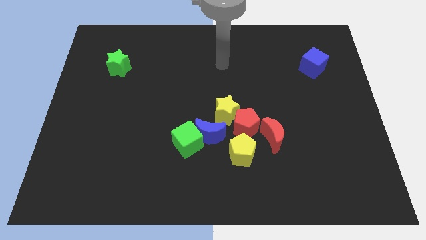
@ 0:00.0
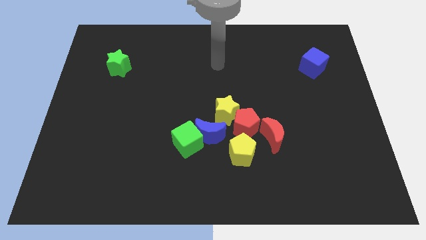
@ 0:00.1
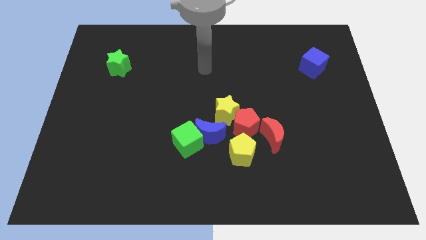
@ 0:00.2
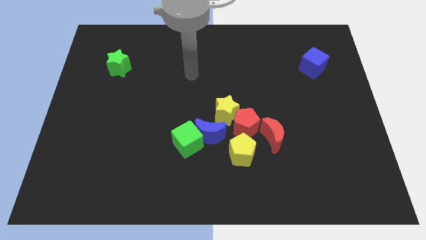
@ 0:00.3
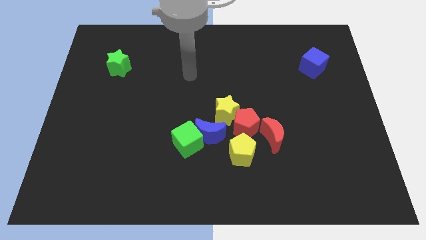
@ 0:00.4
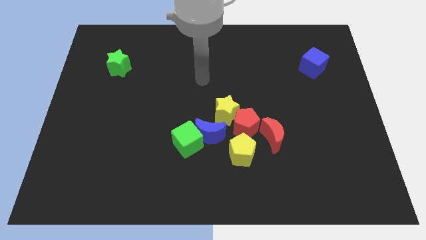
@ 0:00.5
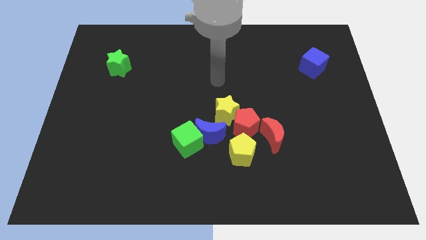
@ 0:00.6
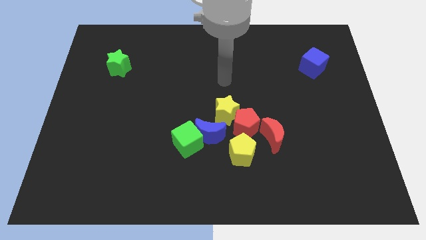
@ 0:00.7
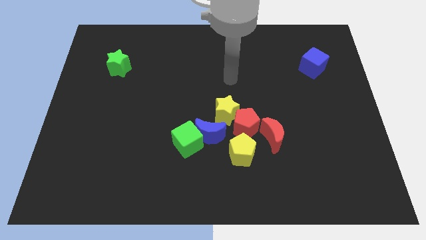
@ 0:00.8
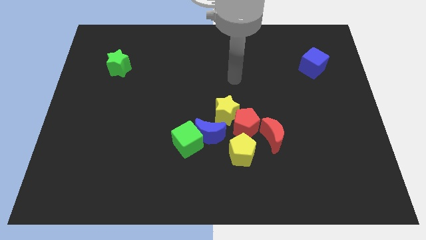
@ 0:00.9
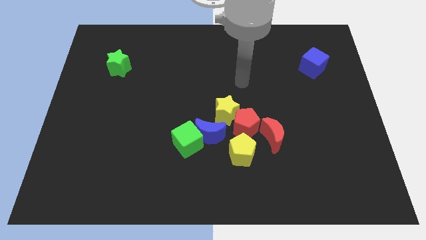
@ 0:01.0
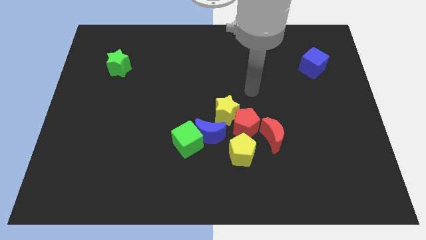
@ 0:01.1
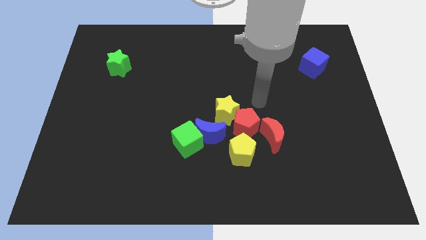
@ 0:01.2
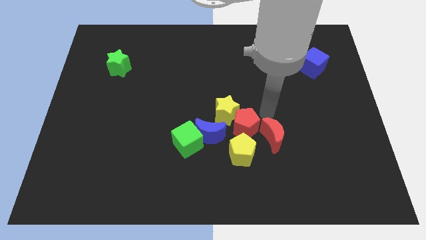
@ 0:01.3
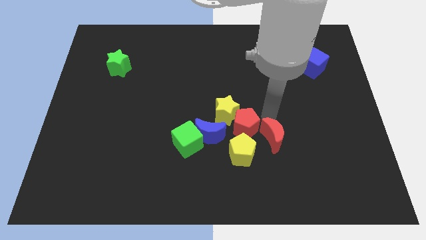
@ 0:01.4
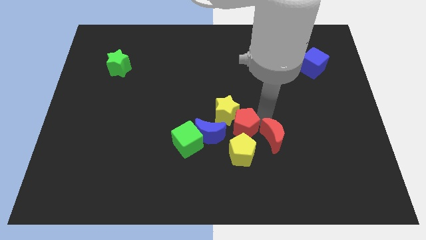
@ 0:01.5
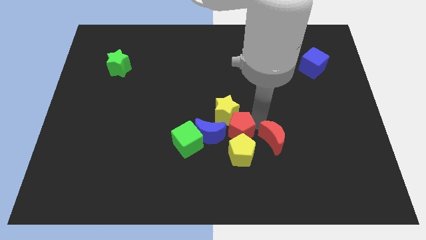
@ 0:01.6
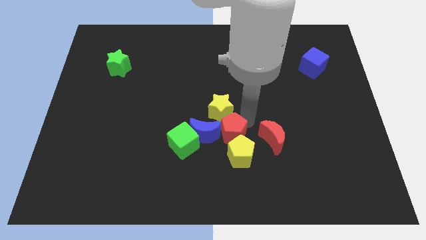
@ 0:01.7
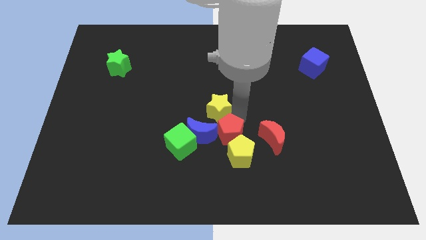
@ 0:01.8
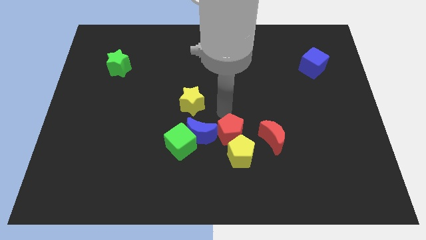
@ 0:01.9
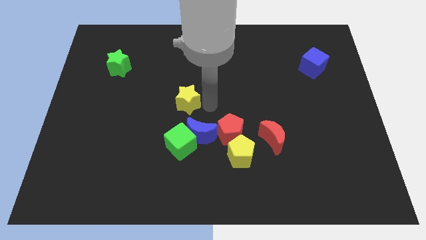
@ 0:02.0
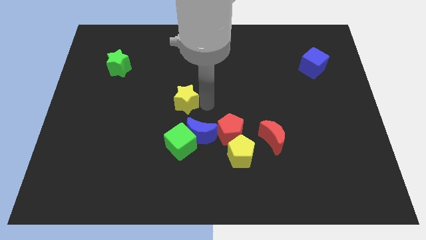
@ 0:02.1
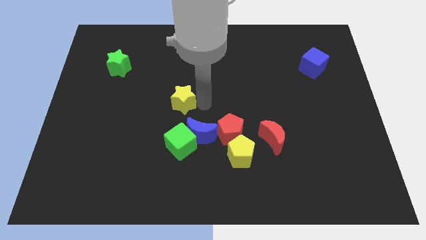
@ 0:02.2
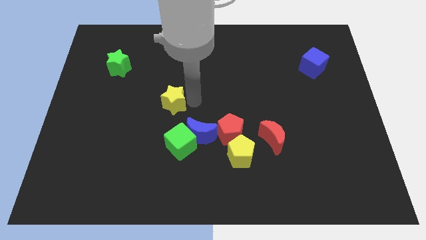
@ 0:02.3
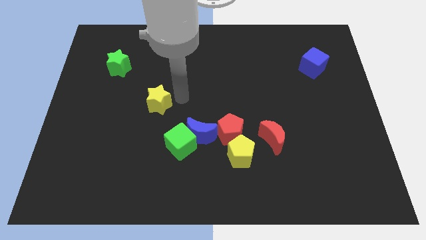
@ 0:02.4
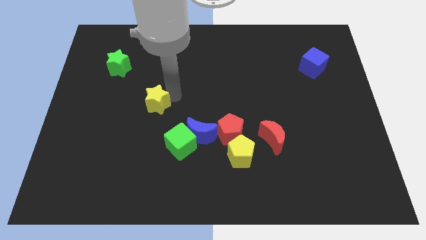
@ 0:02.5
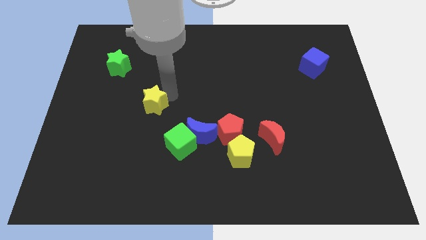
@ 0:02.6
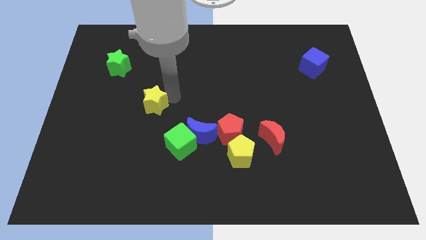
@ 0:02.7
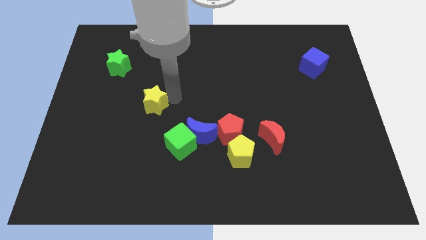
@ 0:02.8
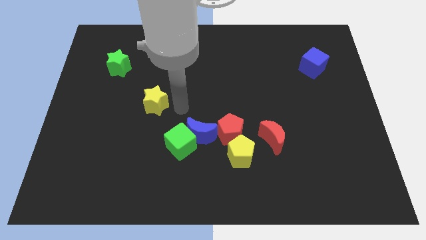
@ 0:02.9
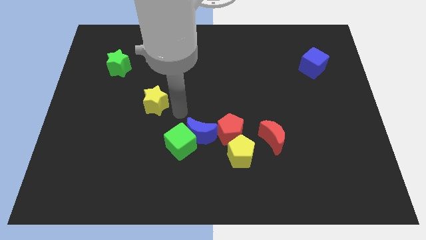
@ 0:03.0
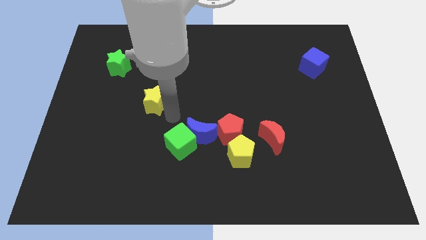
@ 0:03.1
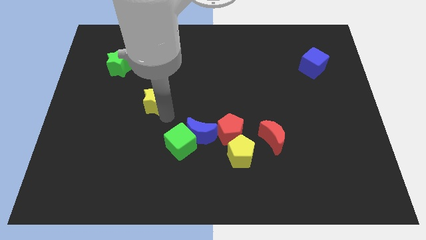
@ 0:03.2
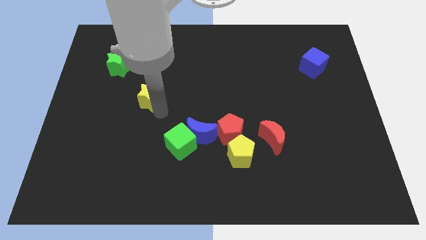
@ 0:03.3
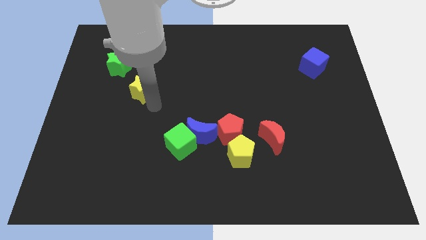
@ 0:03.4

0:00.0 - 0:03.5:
separate the yellow star from the group of blocks

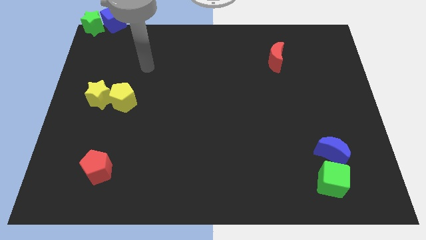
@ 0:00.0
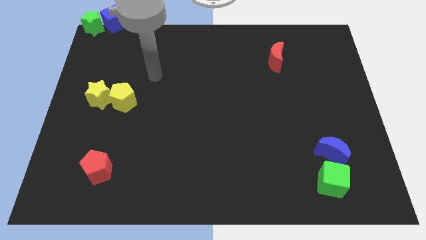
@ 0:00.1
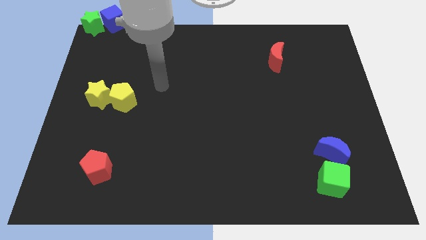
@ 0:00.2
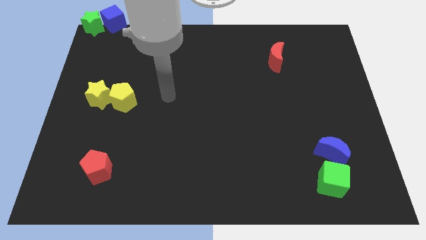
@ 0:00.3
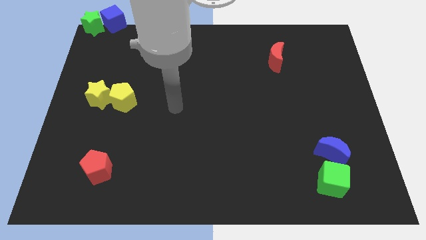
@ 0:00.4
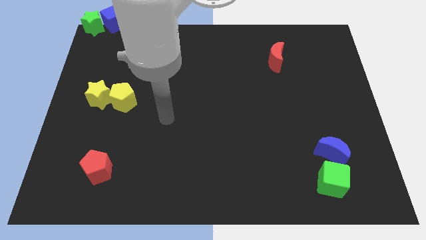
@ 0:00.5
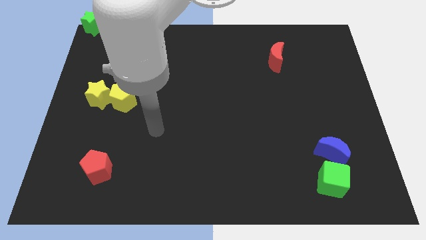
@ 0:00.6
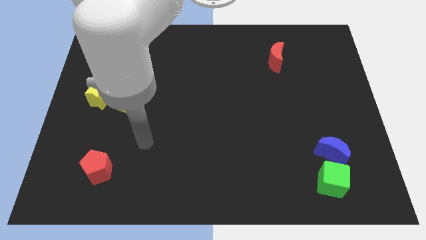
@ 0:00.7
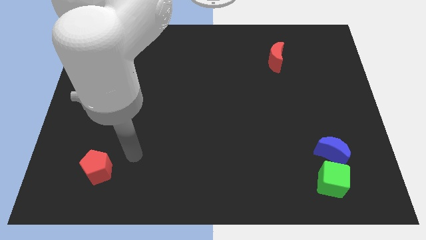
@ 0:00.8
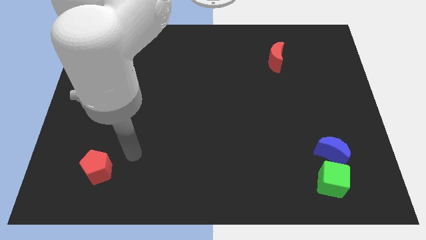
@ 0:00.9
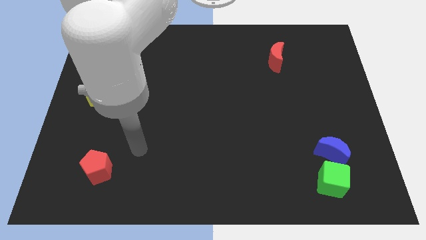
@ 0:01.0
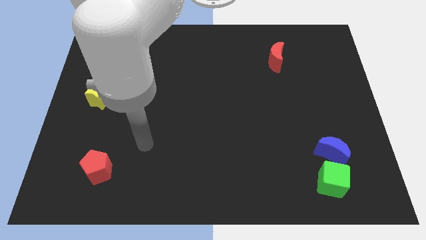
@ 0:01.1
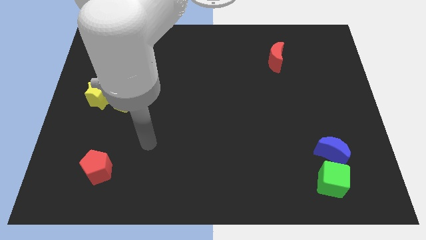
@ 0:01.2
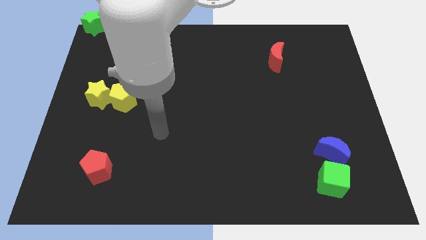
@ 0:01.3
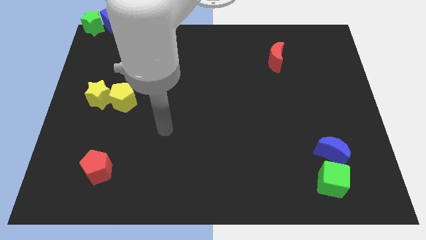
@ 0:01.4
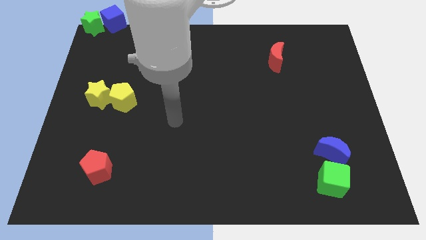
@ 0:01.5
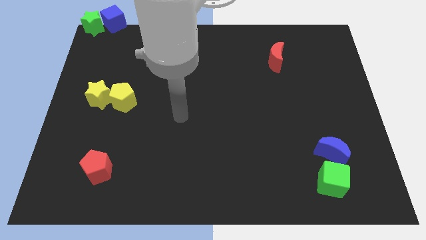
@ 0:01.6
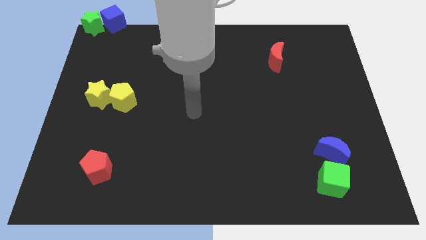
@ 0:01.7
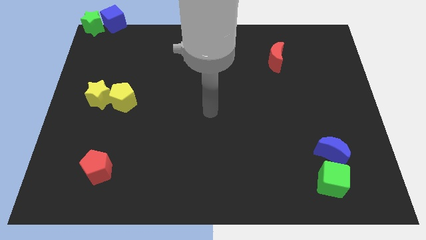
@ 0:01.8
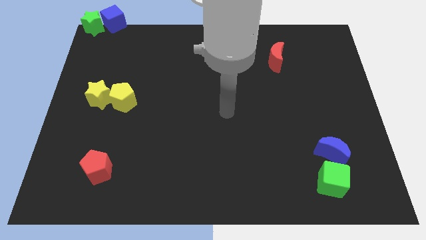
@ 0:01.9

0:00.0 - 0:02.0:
move the arm towards the center

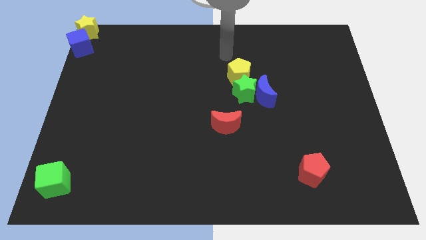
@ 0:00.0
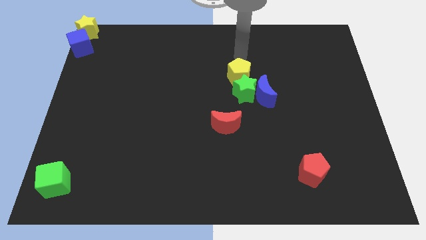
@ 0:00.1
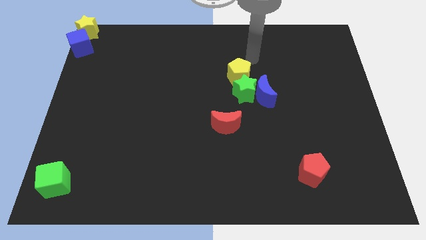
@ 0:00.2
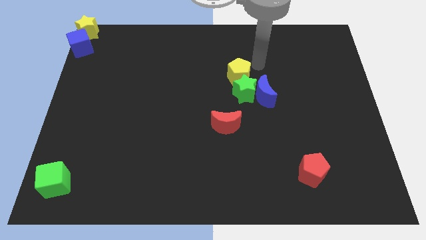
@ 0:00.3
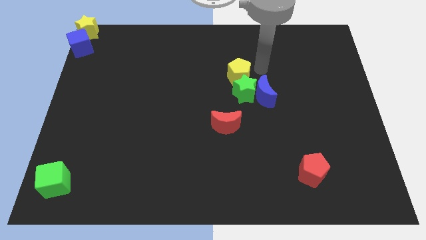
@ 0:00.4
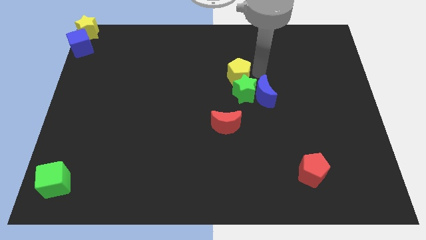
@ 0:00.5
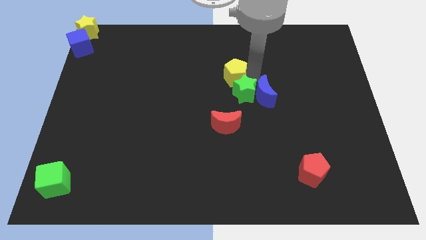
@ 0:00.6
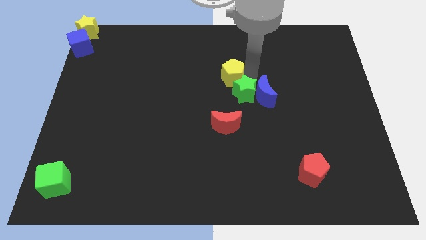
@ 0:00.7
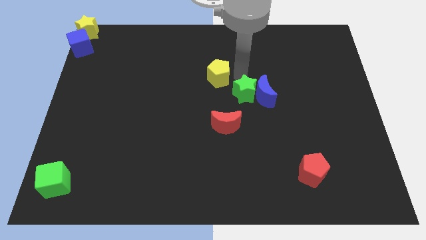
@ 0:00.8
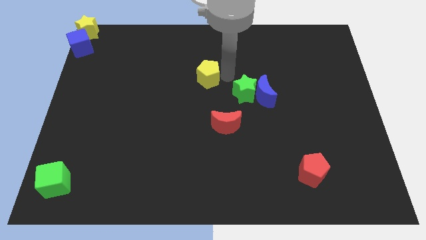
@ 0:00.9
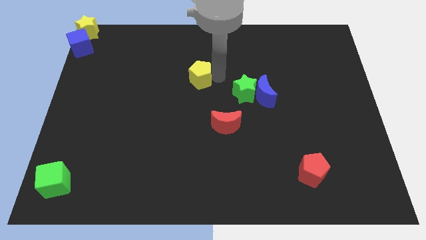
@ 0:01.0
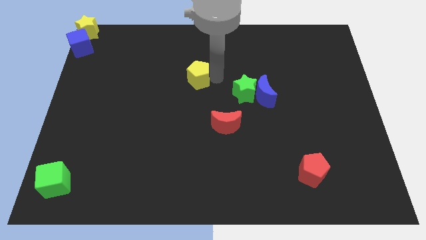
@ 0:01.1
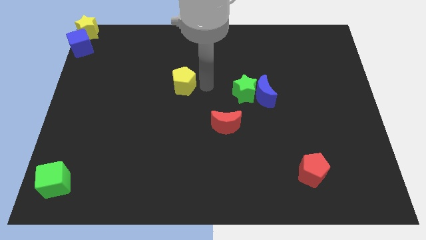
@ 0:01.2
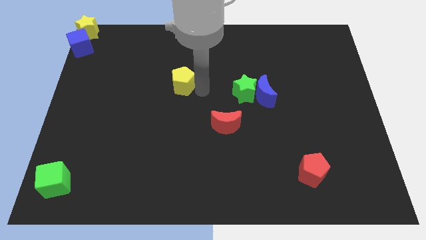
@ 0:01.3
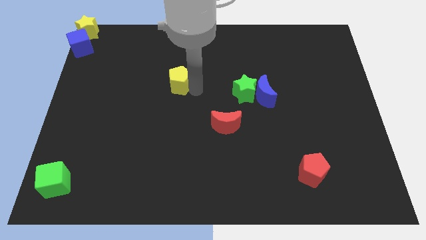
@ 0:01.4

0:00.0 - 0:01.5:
seprate the yellow pentagon from the green star

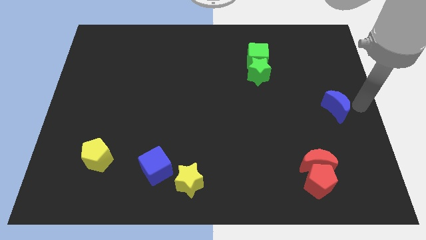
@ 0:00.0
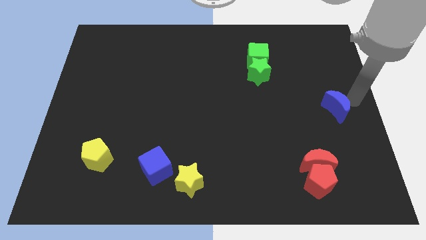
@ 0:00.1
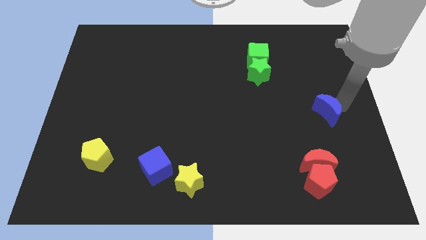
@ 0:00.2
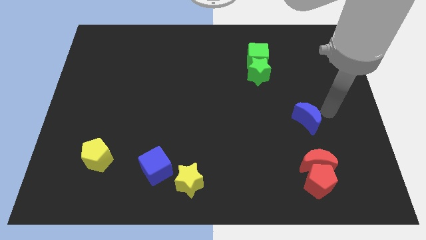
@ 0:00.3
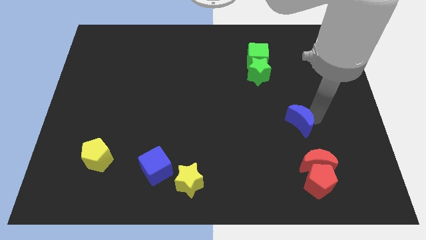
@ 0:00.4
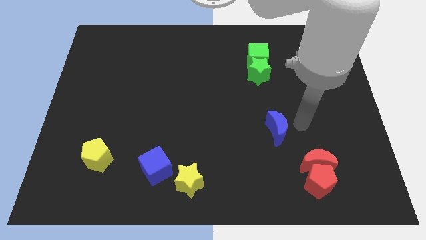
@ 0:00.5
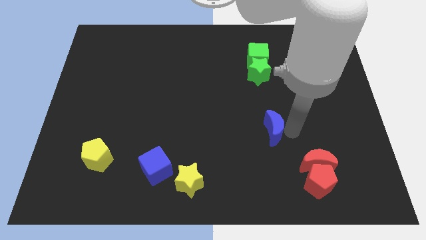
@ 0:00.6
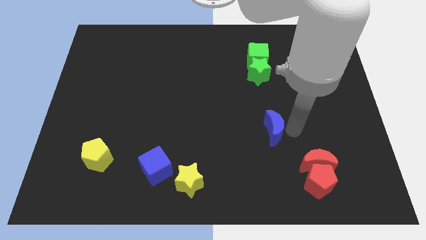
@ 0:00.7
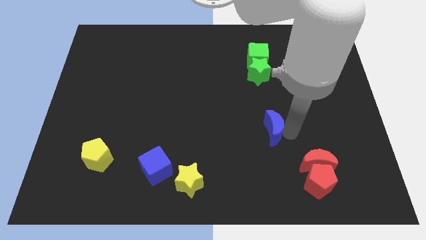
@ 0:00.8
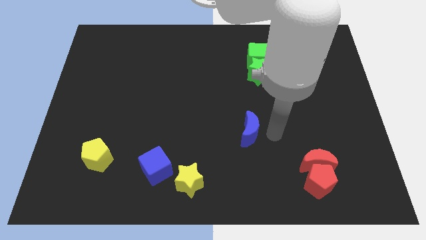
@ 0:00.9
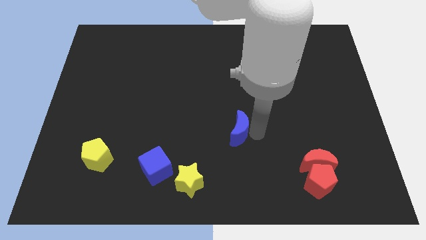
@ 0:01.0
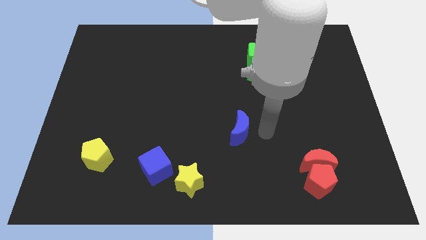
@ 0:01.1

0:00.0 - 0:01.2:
place the blue moon to the bottom center

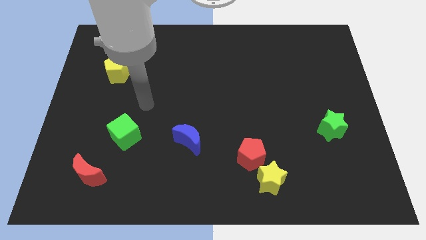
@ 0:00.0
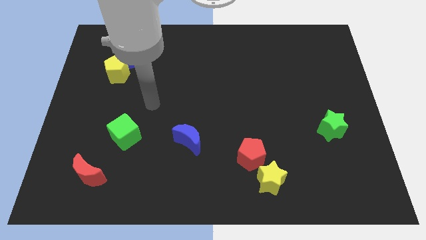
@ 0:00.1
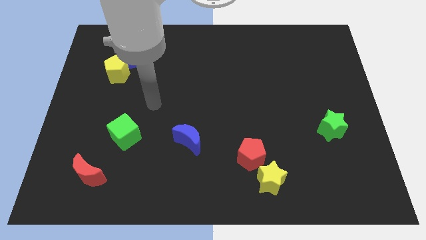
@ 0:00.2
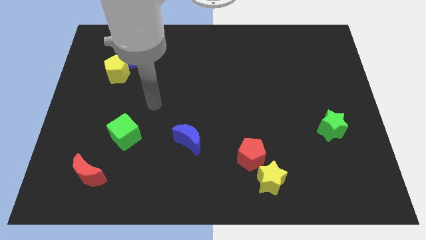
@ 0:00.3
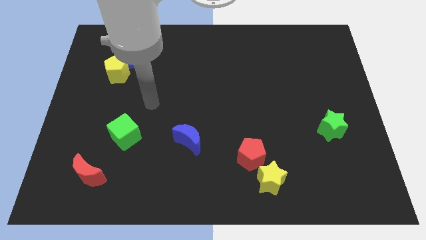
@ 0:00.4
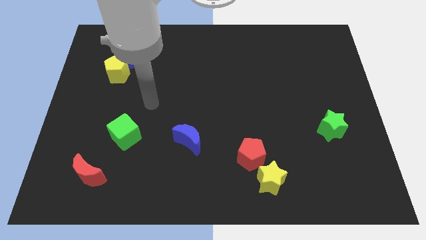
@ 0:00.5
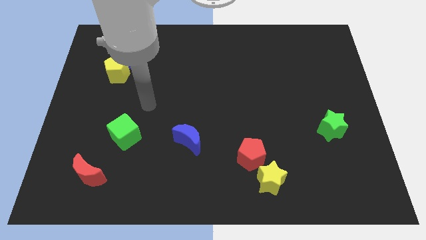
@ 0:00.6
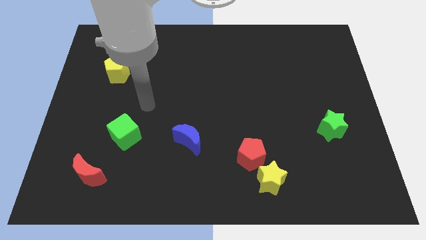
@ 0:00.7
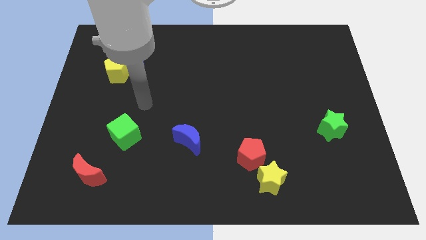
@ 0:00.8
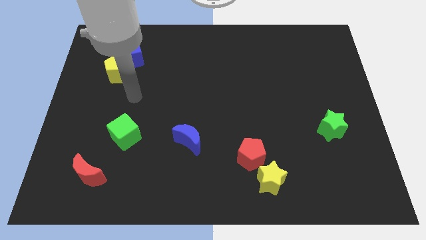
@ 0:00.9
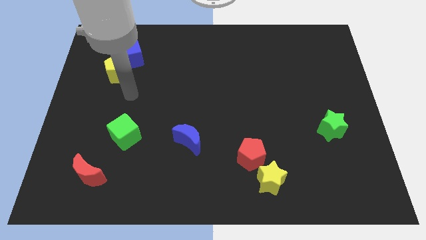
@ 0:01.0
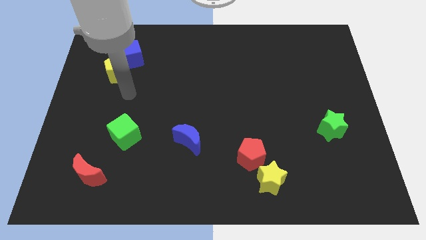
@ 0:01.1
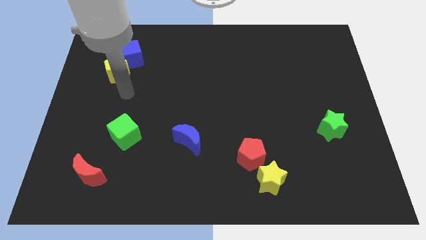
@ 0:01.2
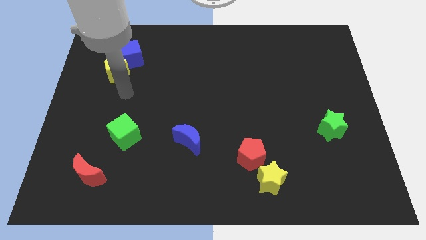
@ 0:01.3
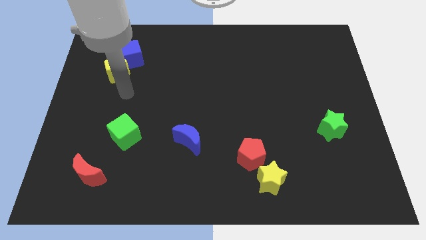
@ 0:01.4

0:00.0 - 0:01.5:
point your arm at the bottom side of the yellow pentagon
